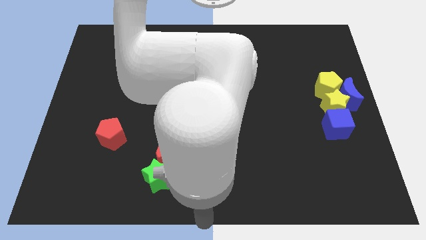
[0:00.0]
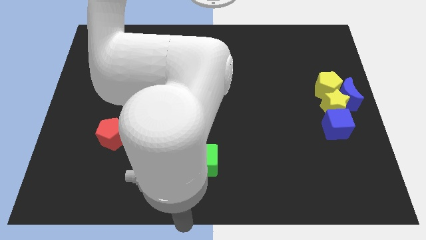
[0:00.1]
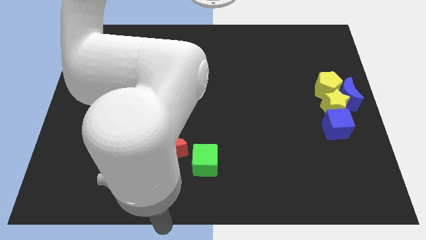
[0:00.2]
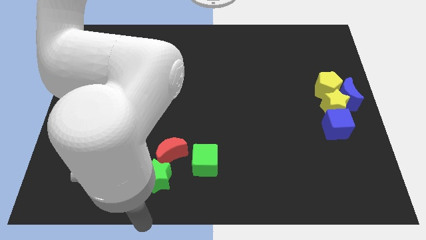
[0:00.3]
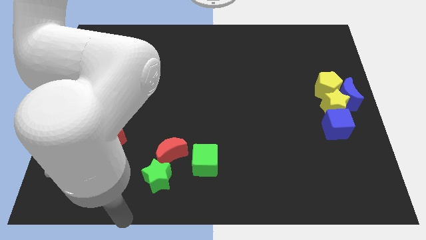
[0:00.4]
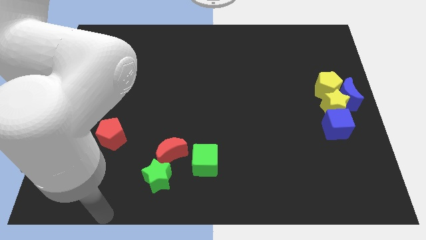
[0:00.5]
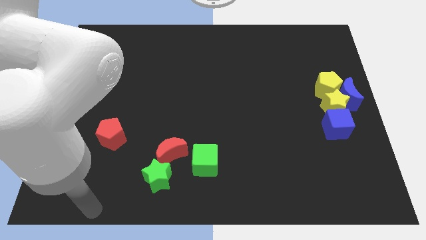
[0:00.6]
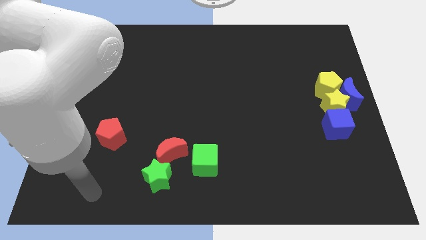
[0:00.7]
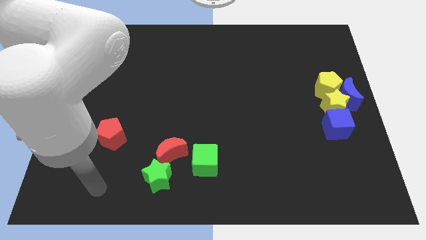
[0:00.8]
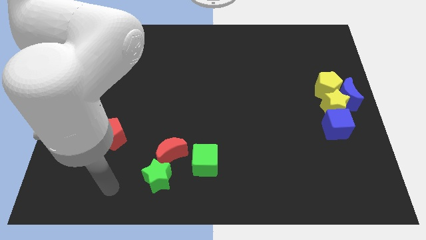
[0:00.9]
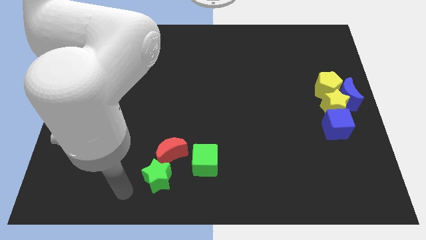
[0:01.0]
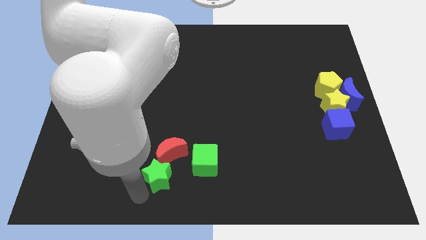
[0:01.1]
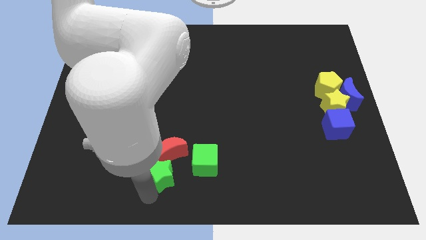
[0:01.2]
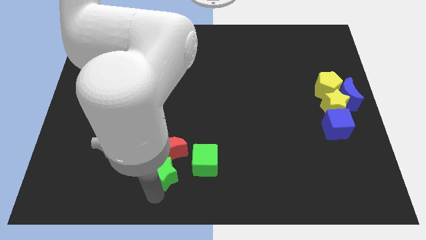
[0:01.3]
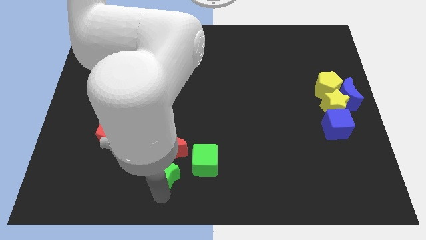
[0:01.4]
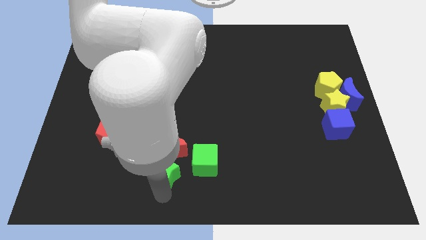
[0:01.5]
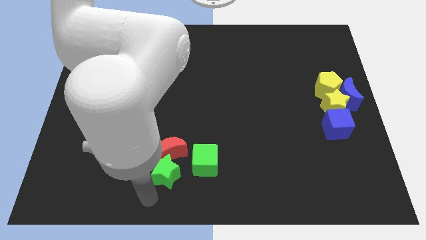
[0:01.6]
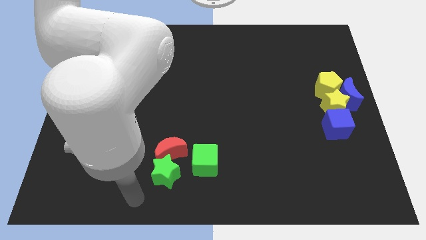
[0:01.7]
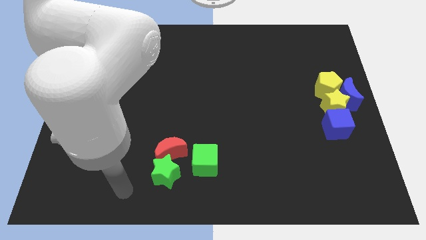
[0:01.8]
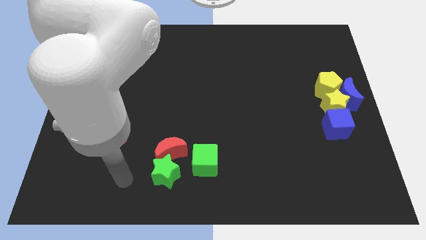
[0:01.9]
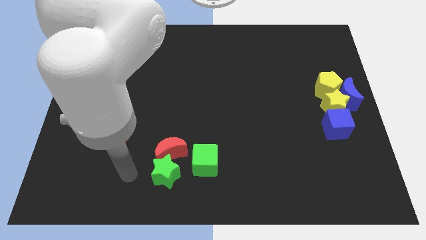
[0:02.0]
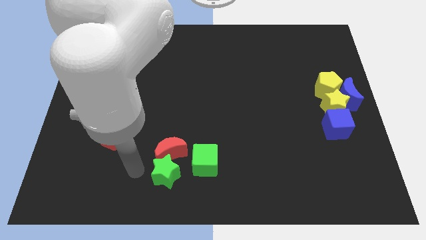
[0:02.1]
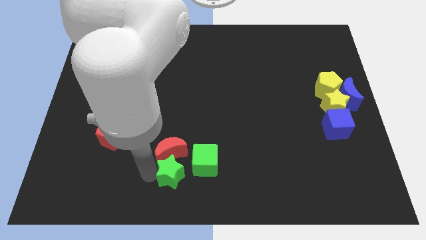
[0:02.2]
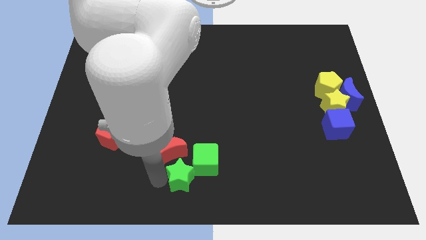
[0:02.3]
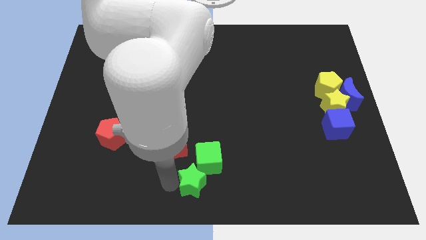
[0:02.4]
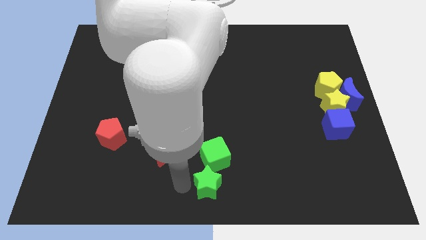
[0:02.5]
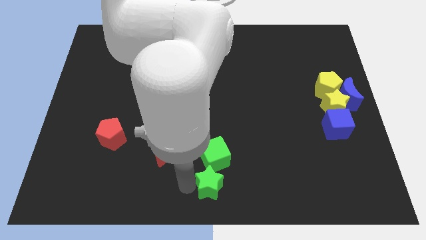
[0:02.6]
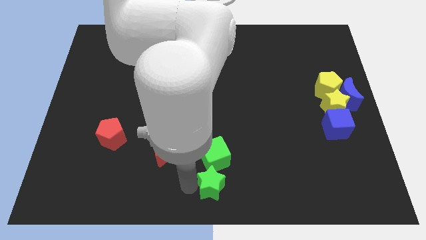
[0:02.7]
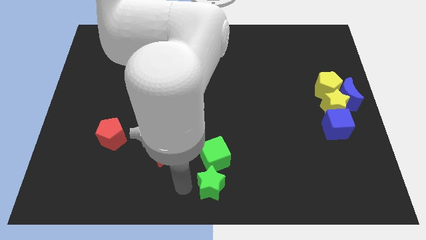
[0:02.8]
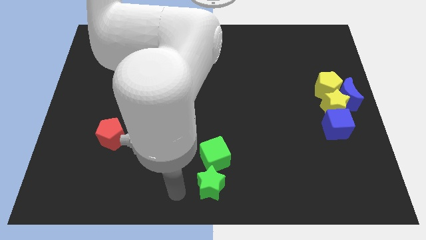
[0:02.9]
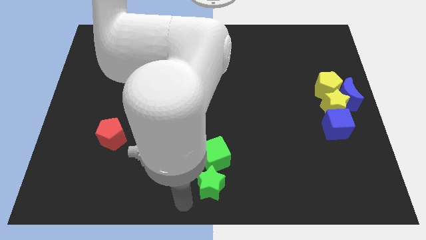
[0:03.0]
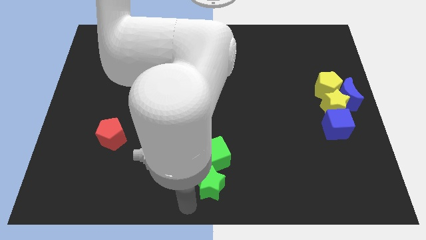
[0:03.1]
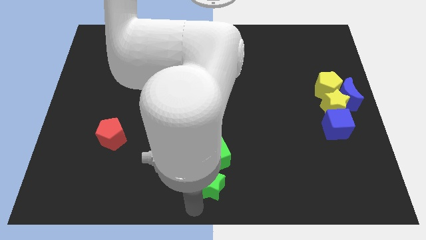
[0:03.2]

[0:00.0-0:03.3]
put the green star at the bottom of the green cube

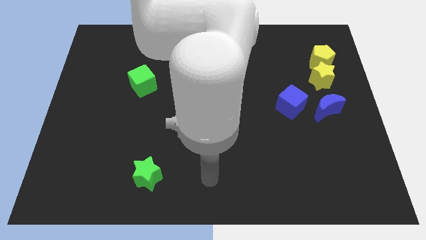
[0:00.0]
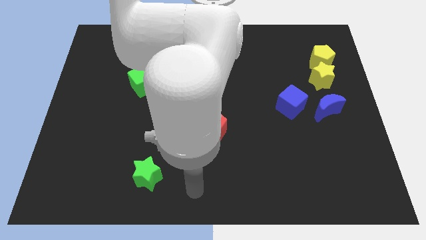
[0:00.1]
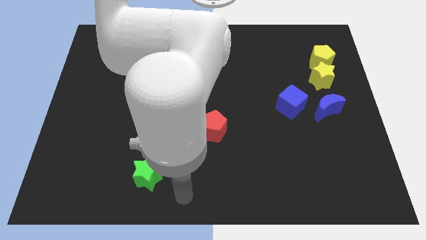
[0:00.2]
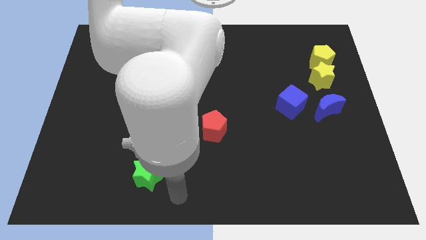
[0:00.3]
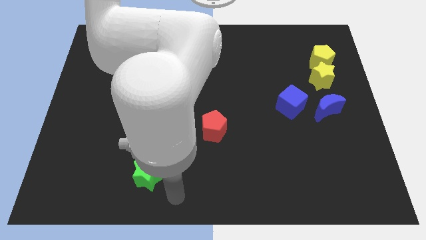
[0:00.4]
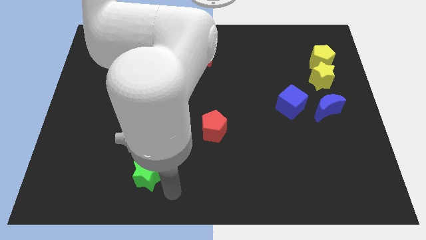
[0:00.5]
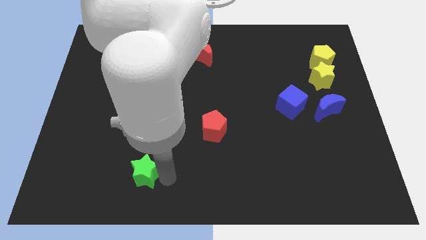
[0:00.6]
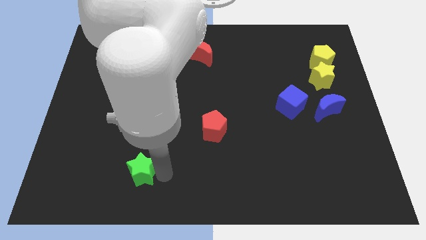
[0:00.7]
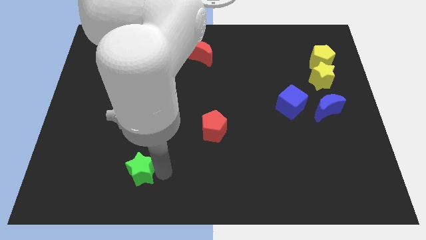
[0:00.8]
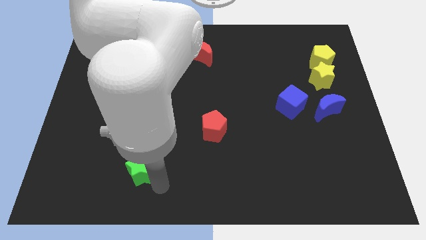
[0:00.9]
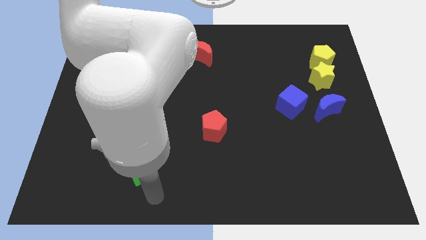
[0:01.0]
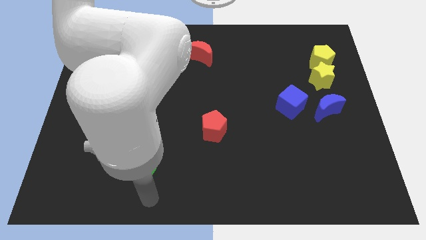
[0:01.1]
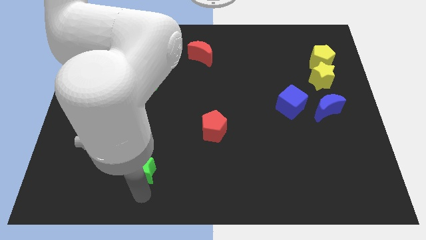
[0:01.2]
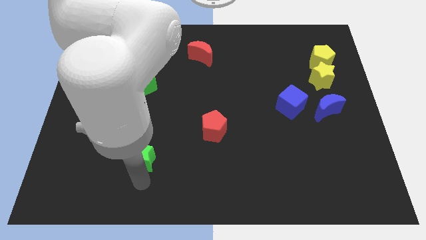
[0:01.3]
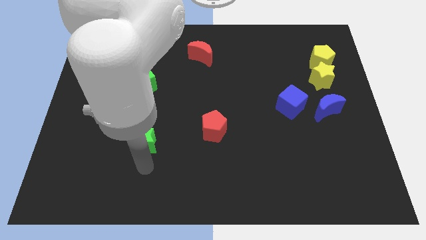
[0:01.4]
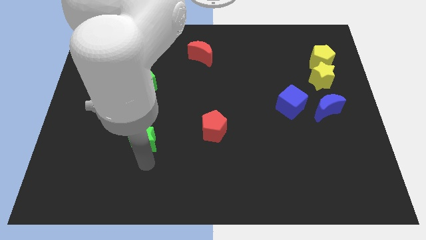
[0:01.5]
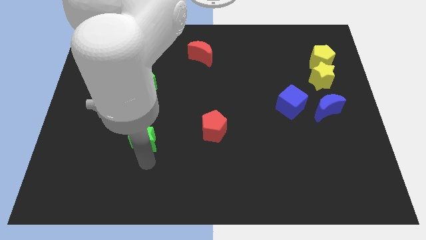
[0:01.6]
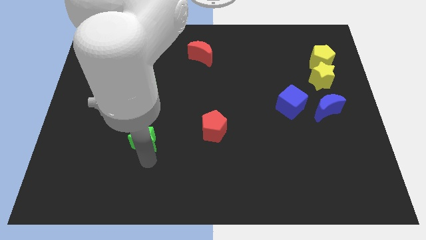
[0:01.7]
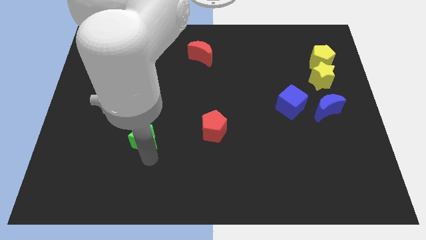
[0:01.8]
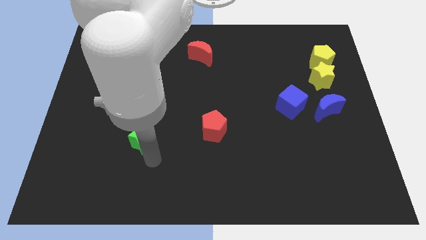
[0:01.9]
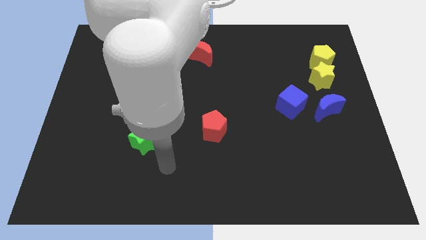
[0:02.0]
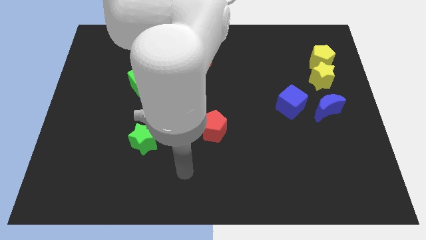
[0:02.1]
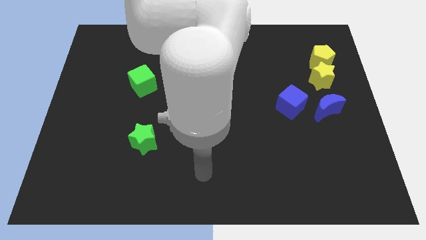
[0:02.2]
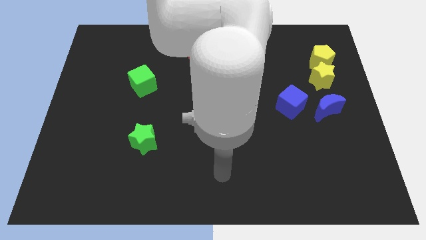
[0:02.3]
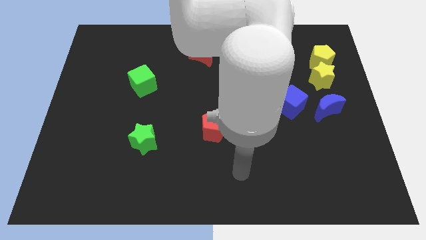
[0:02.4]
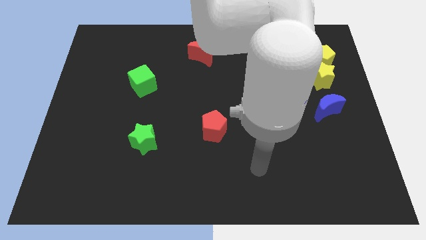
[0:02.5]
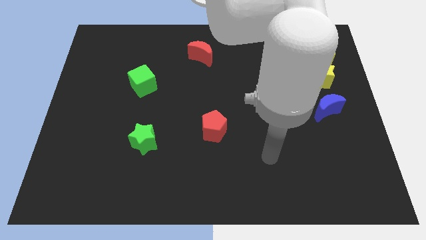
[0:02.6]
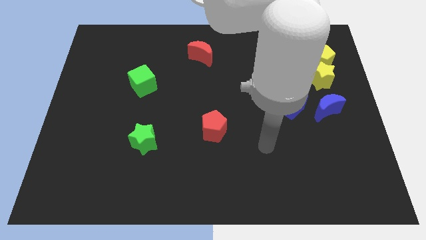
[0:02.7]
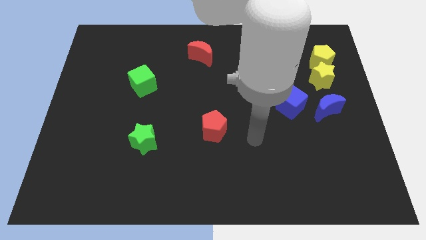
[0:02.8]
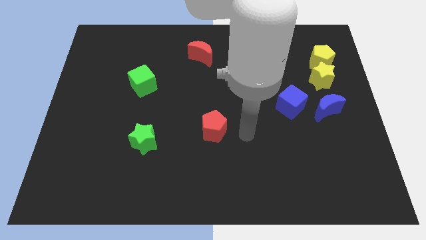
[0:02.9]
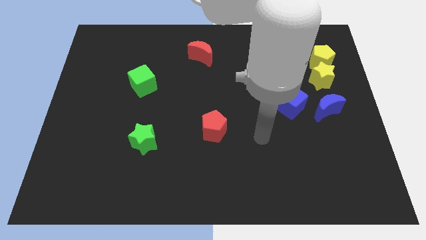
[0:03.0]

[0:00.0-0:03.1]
move the green star towards the green cube

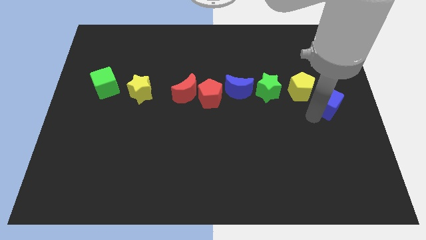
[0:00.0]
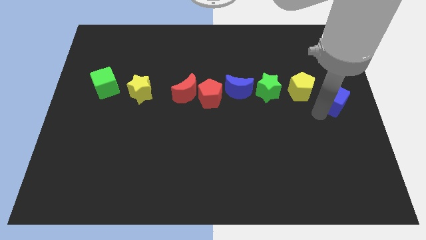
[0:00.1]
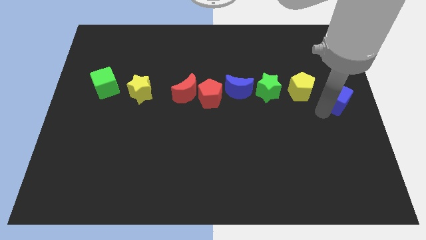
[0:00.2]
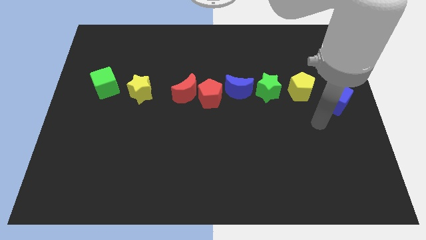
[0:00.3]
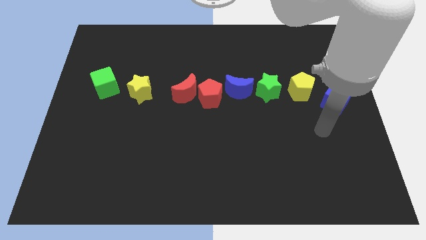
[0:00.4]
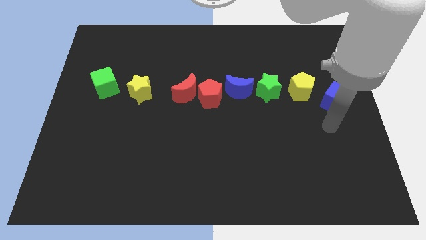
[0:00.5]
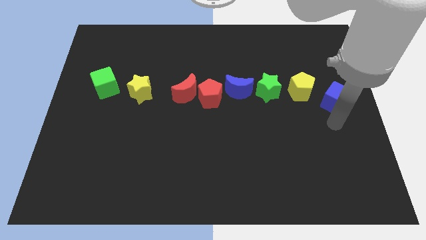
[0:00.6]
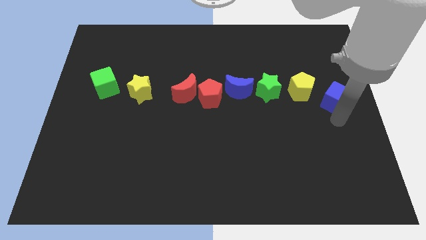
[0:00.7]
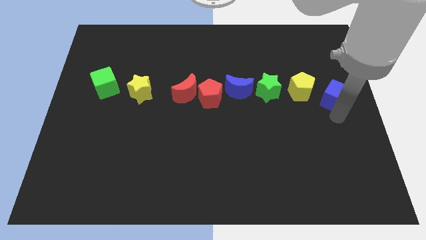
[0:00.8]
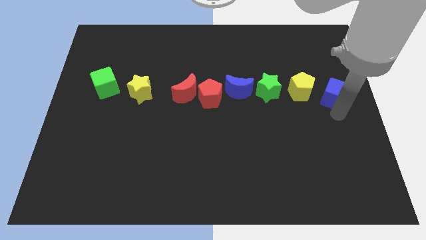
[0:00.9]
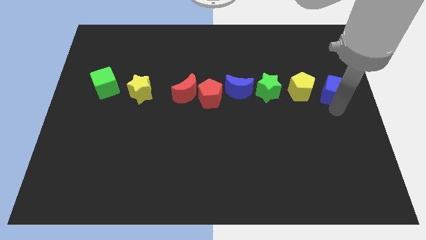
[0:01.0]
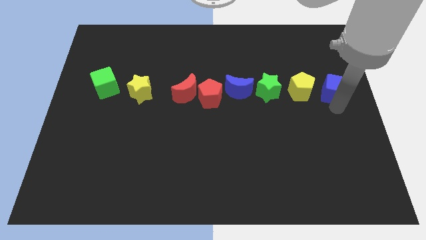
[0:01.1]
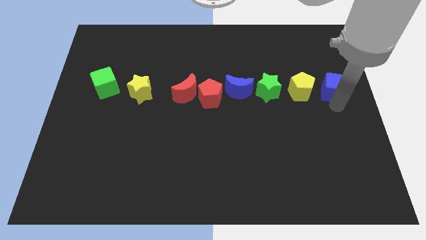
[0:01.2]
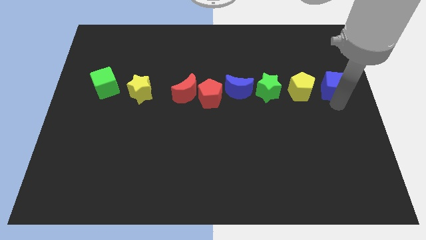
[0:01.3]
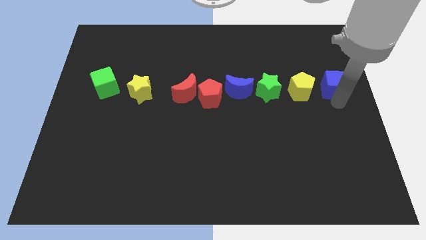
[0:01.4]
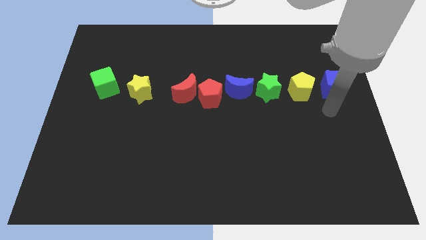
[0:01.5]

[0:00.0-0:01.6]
slide the blue cube to the right of the yellow pentagon

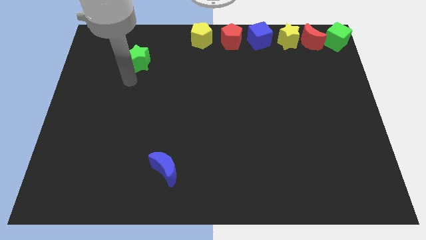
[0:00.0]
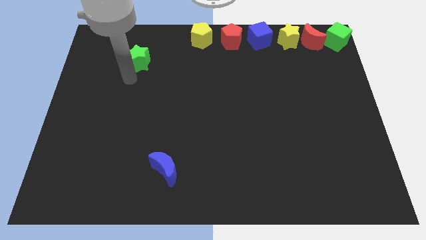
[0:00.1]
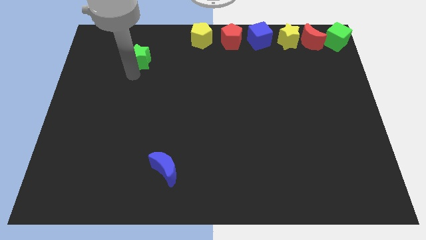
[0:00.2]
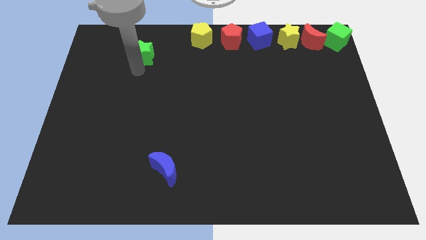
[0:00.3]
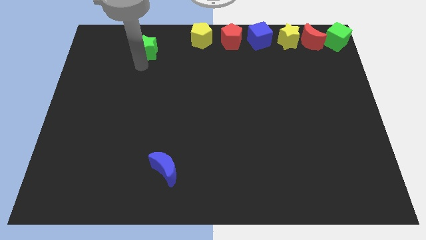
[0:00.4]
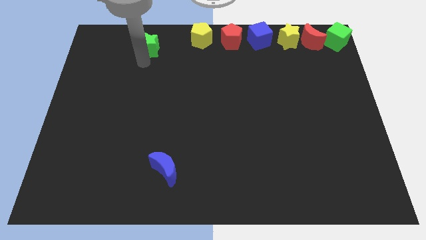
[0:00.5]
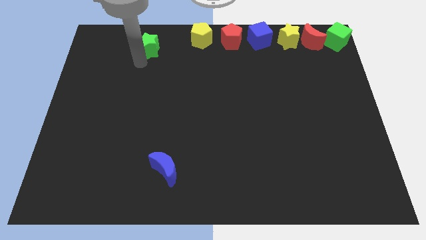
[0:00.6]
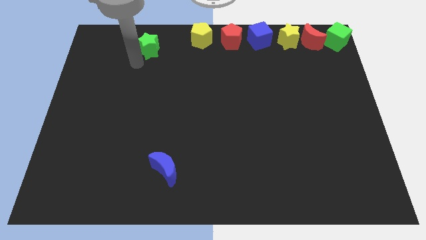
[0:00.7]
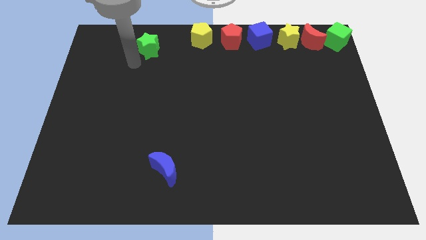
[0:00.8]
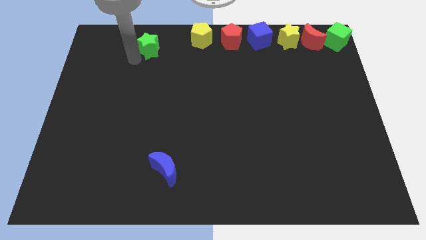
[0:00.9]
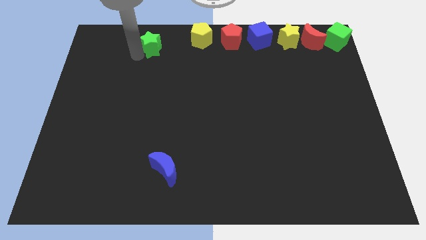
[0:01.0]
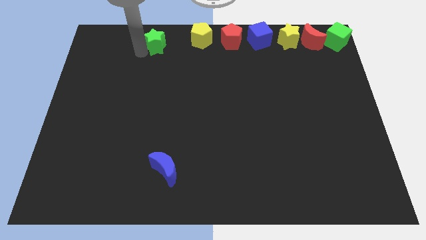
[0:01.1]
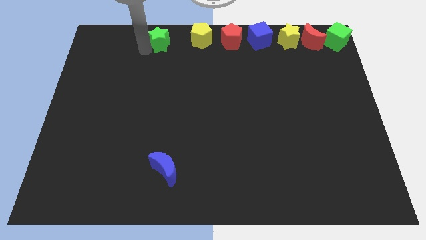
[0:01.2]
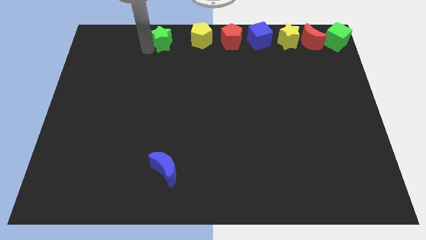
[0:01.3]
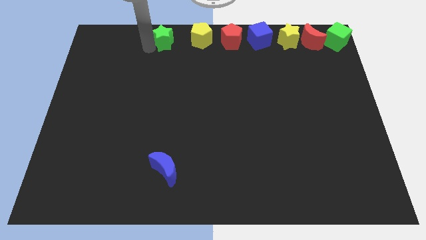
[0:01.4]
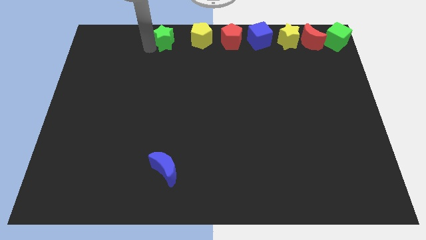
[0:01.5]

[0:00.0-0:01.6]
push the green star to the left of the yellow pentagon
